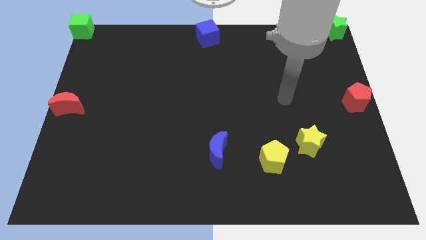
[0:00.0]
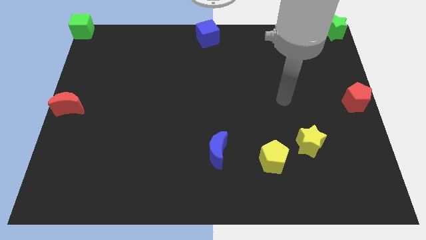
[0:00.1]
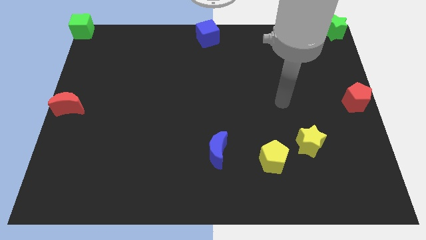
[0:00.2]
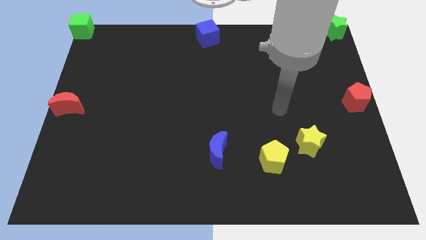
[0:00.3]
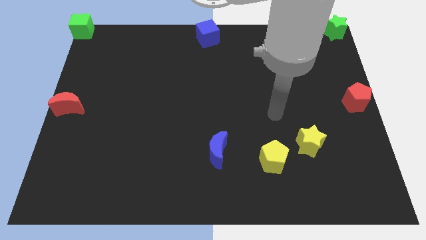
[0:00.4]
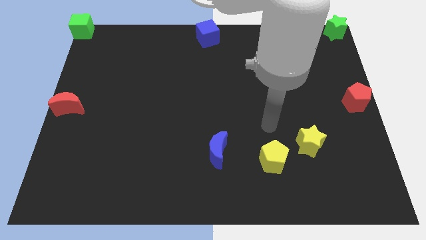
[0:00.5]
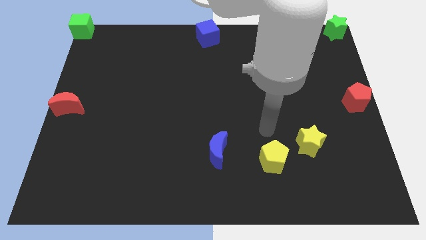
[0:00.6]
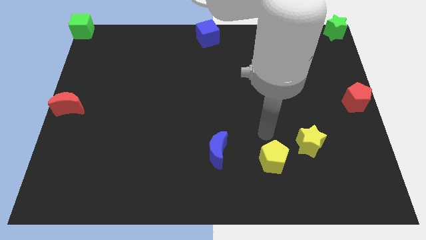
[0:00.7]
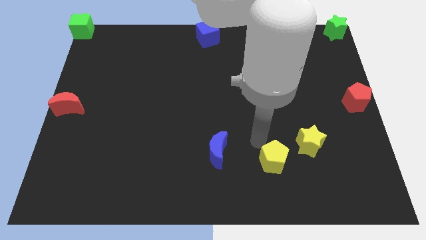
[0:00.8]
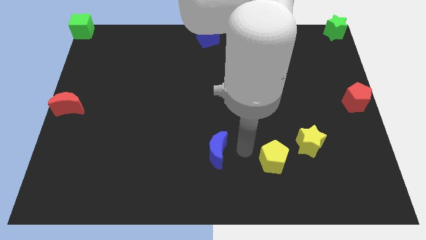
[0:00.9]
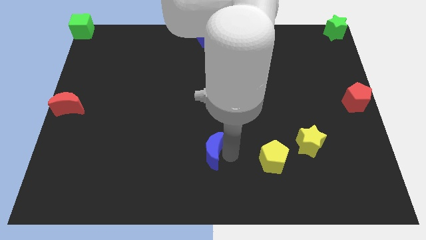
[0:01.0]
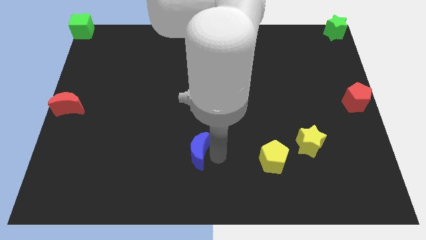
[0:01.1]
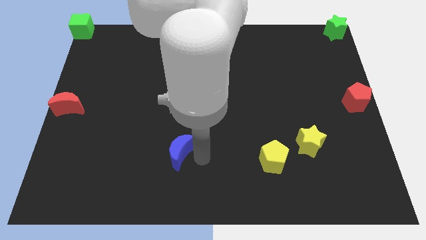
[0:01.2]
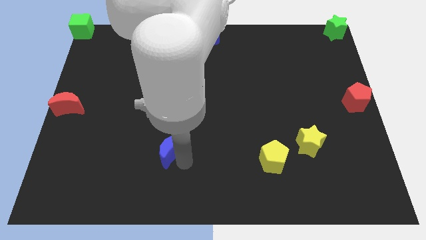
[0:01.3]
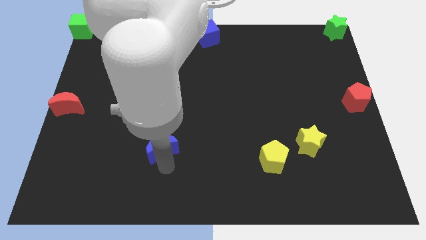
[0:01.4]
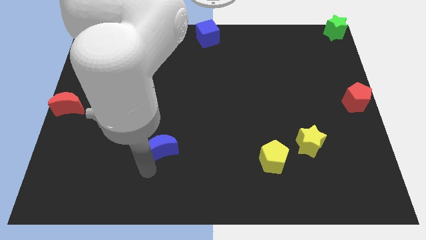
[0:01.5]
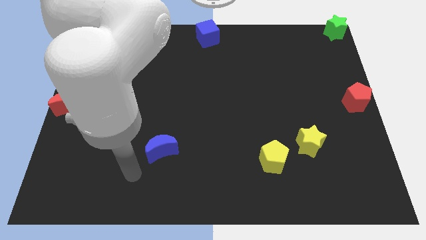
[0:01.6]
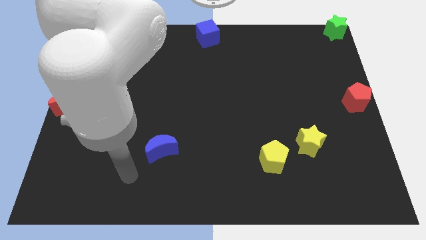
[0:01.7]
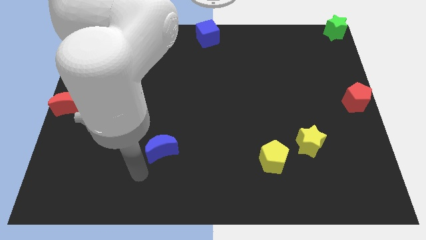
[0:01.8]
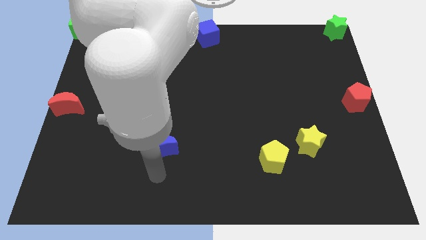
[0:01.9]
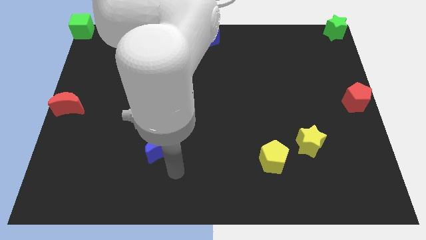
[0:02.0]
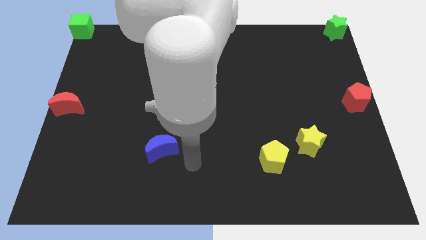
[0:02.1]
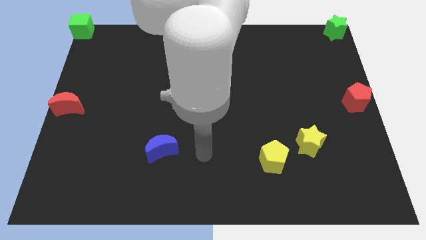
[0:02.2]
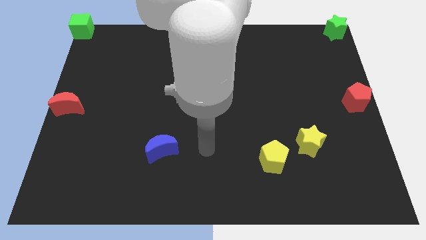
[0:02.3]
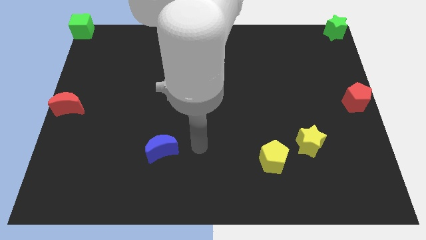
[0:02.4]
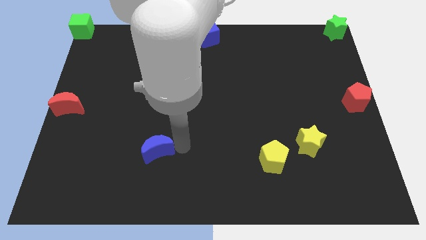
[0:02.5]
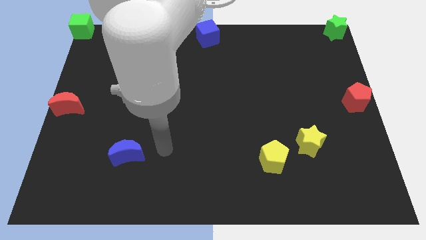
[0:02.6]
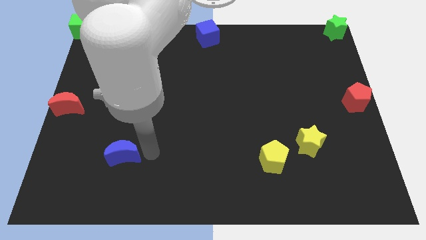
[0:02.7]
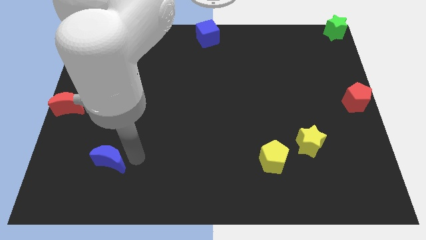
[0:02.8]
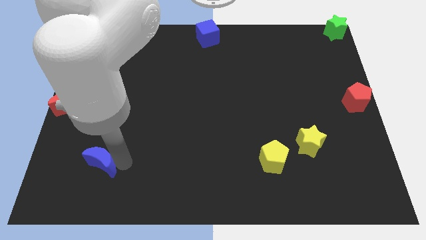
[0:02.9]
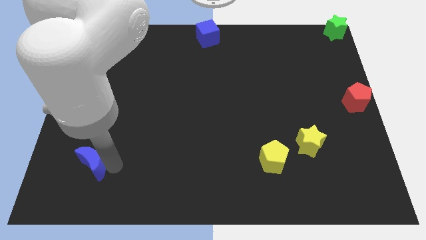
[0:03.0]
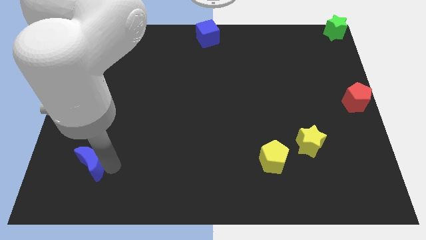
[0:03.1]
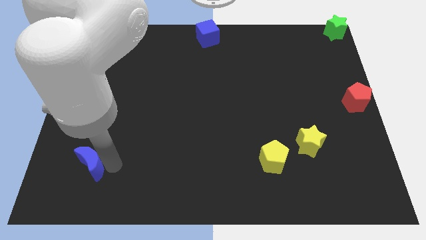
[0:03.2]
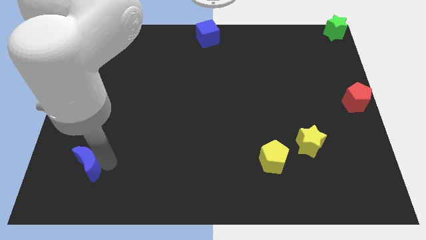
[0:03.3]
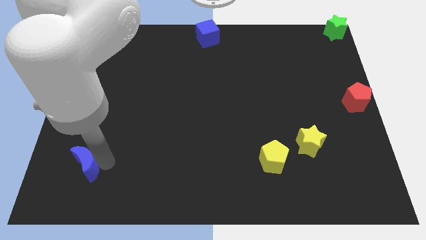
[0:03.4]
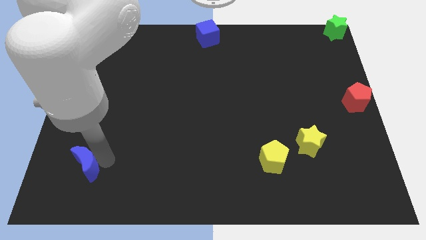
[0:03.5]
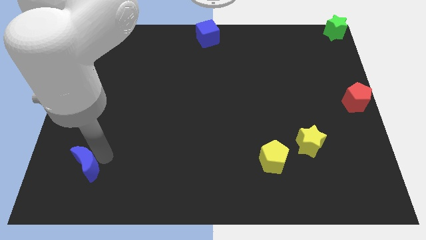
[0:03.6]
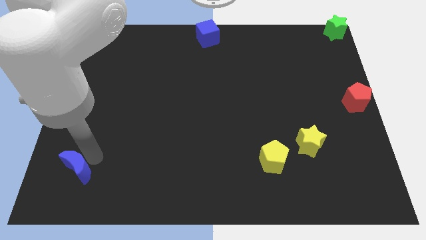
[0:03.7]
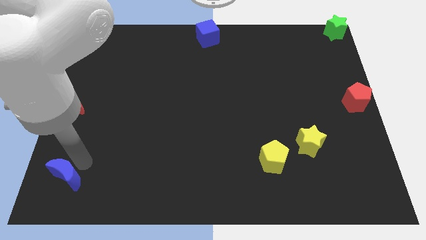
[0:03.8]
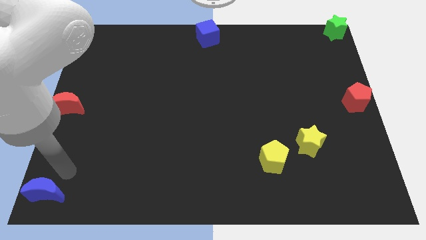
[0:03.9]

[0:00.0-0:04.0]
move blue moon towards the bottom left of blue moon

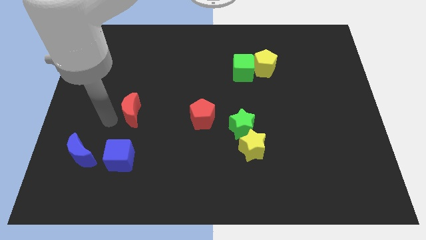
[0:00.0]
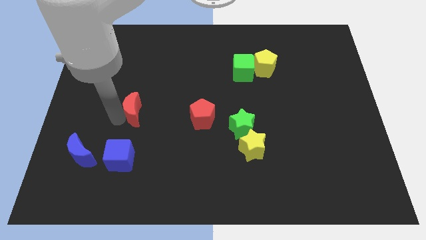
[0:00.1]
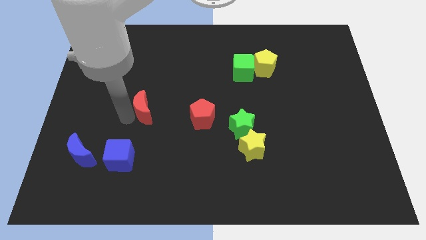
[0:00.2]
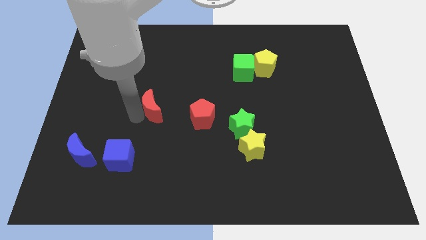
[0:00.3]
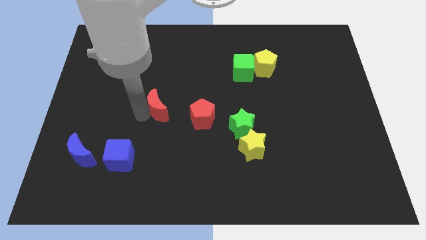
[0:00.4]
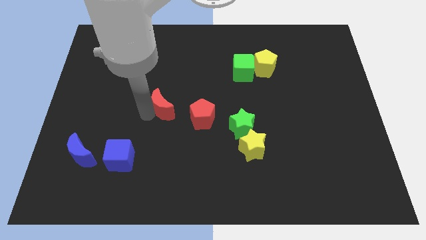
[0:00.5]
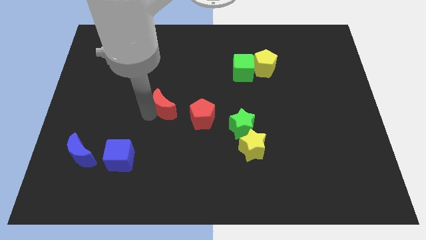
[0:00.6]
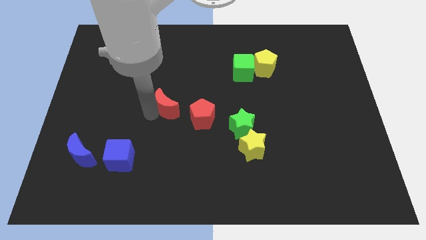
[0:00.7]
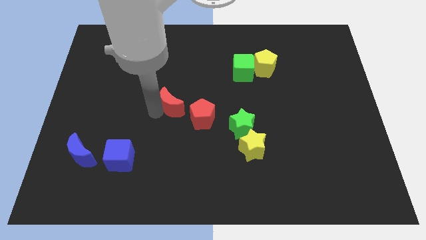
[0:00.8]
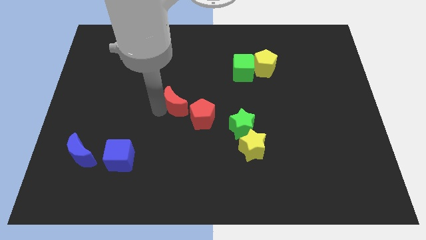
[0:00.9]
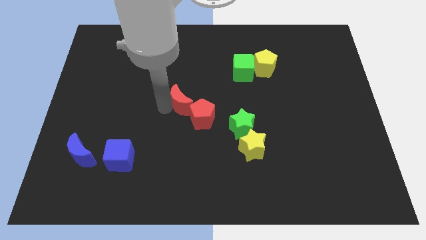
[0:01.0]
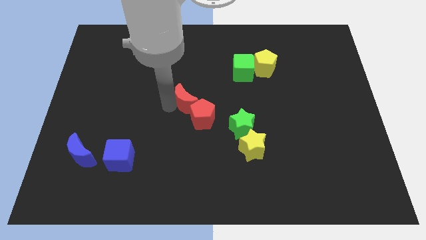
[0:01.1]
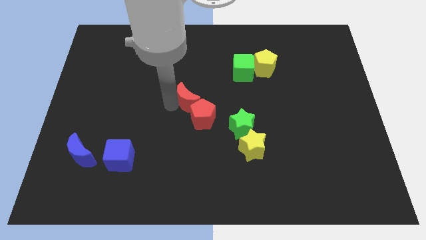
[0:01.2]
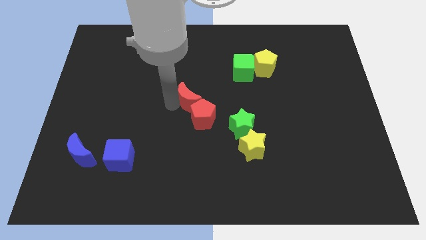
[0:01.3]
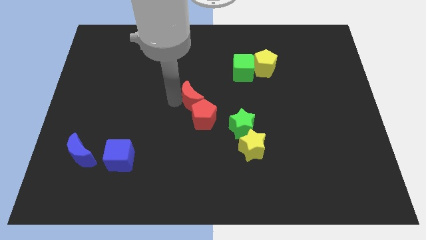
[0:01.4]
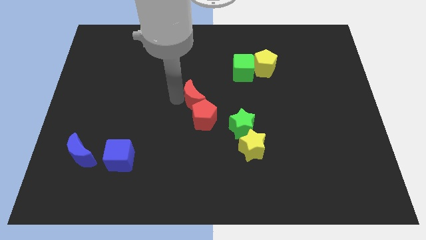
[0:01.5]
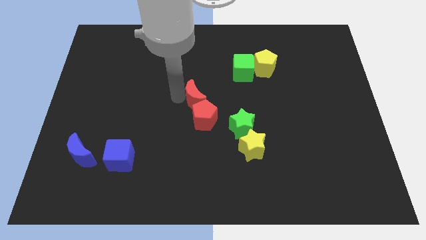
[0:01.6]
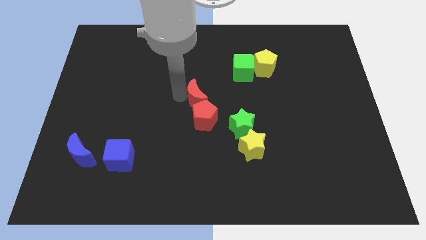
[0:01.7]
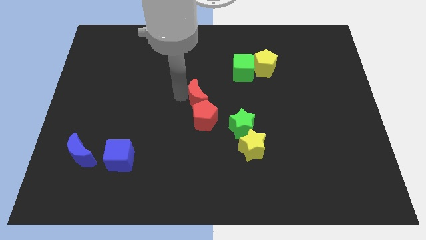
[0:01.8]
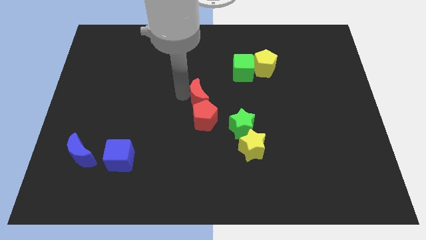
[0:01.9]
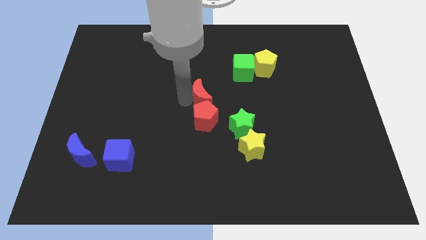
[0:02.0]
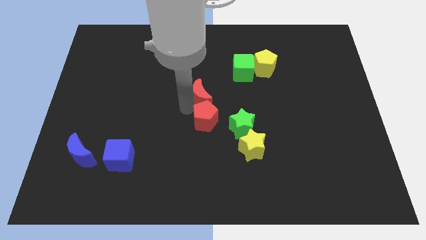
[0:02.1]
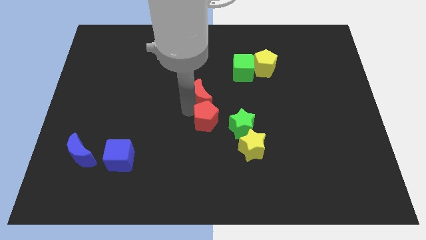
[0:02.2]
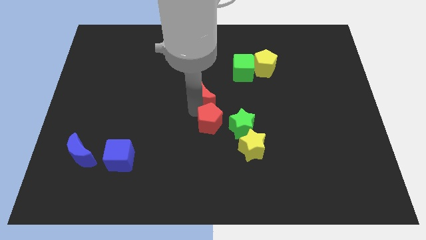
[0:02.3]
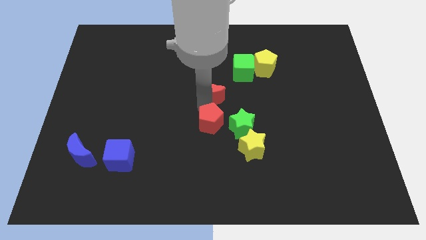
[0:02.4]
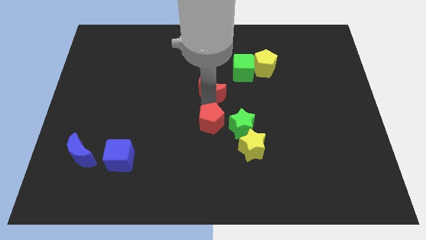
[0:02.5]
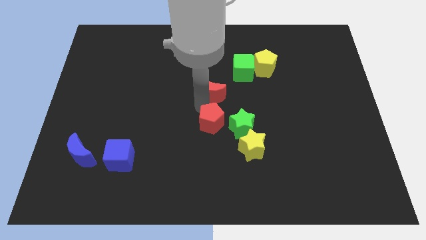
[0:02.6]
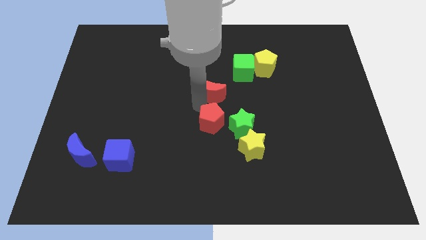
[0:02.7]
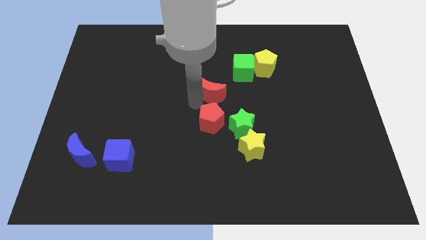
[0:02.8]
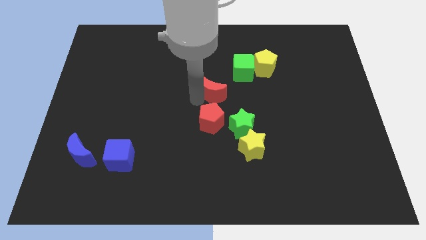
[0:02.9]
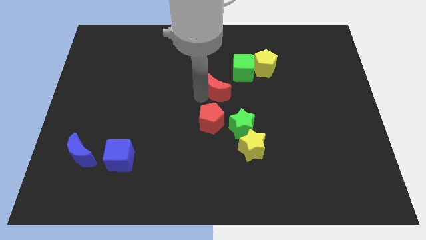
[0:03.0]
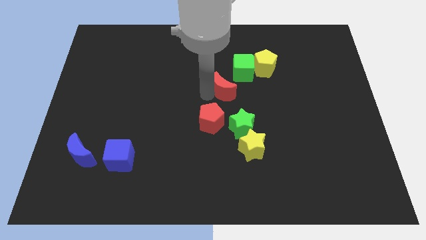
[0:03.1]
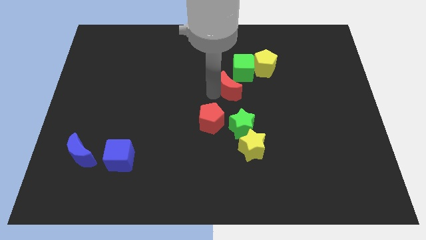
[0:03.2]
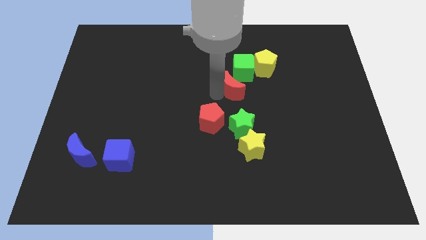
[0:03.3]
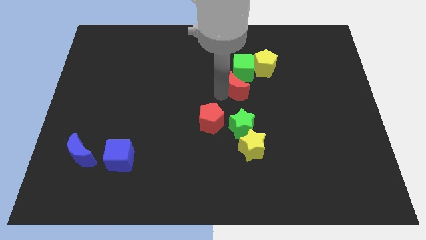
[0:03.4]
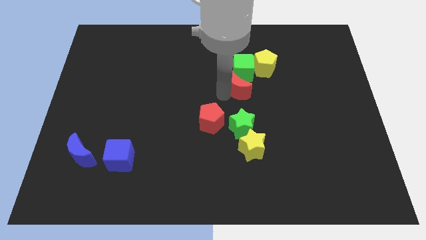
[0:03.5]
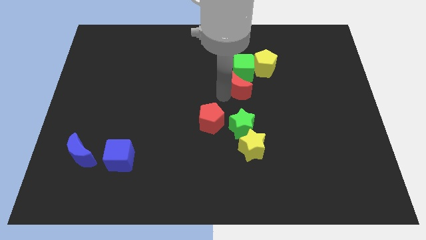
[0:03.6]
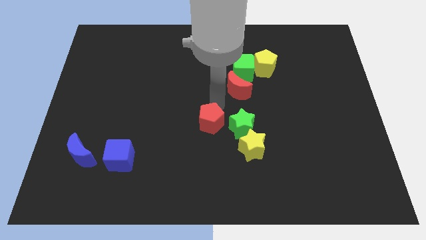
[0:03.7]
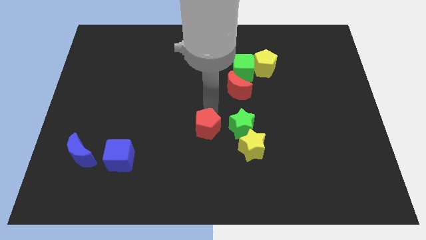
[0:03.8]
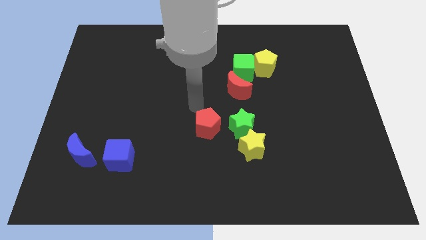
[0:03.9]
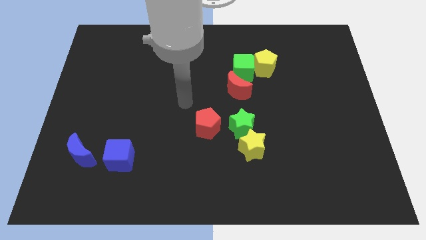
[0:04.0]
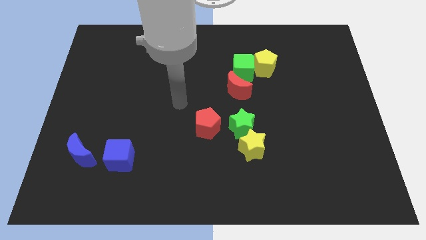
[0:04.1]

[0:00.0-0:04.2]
move red crescent towards bottom of the green cube

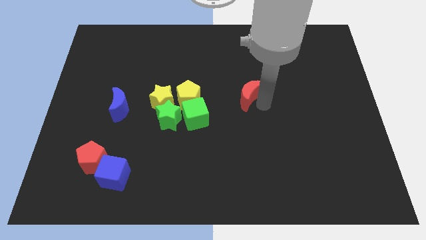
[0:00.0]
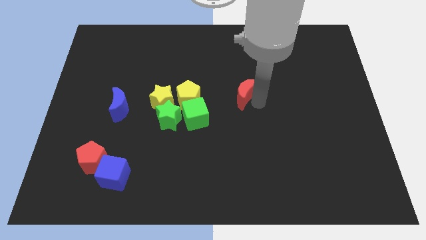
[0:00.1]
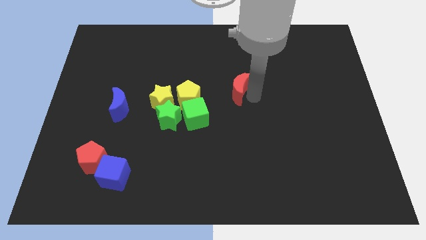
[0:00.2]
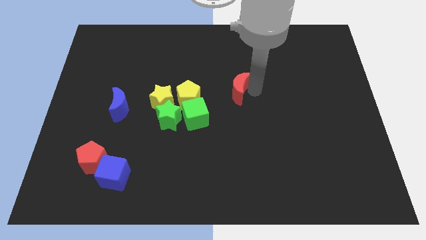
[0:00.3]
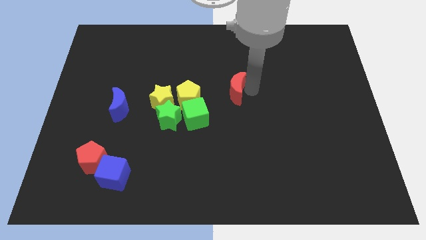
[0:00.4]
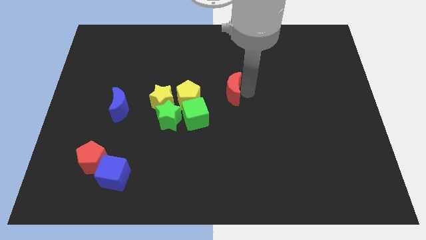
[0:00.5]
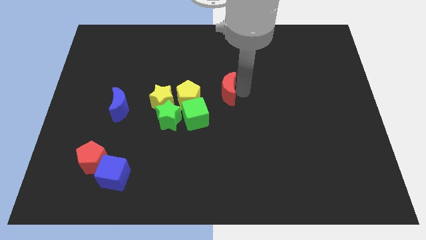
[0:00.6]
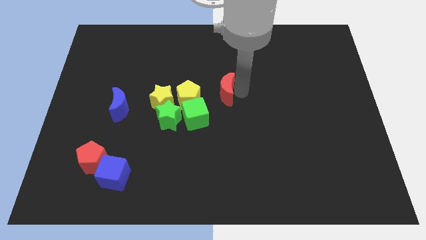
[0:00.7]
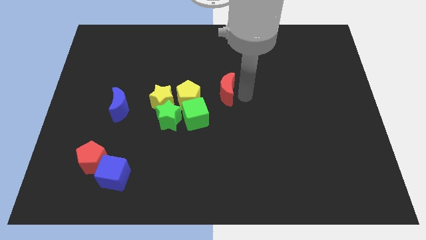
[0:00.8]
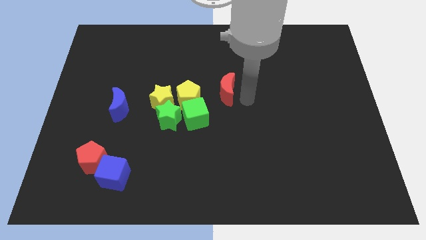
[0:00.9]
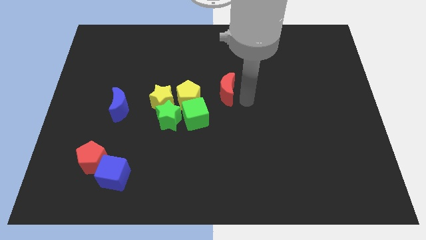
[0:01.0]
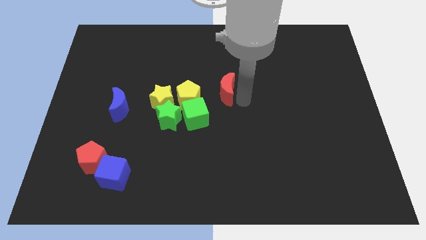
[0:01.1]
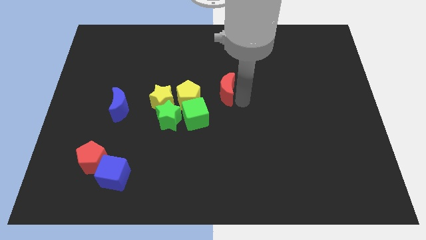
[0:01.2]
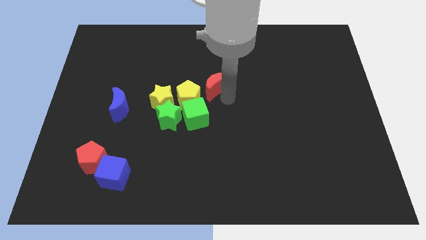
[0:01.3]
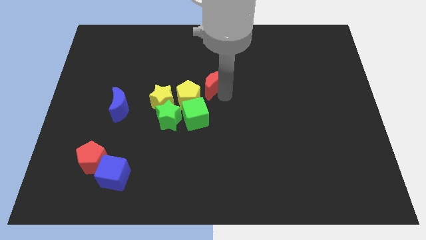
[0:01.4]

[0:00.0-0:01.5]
push the red crescent towards the yellow pentagon
